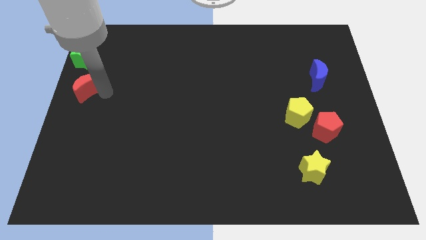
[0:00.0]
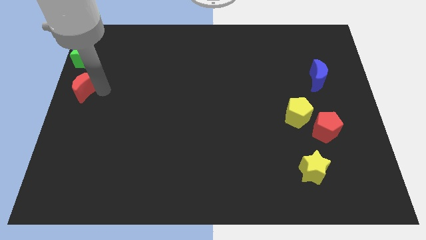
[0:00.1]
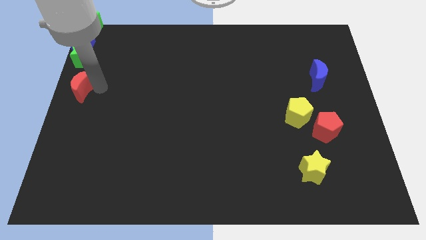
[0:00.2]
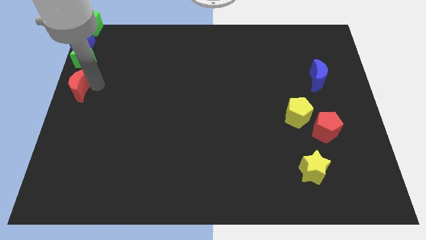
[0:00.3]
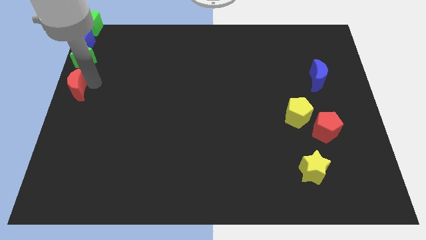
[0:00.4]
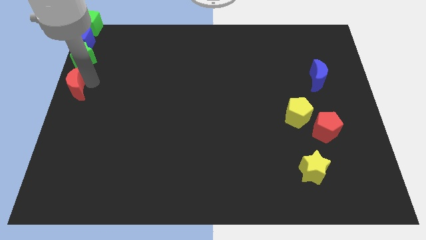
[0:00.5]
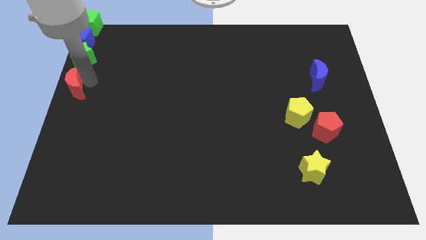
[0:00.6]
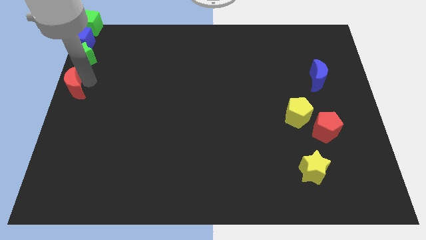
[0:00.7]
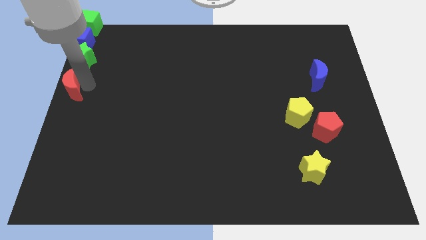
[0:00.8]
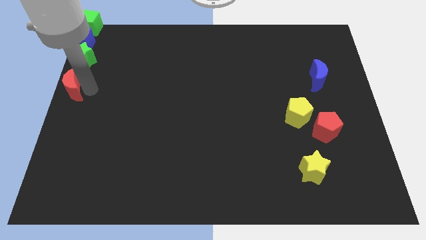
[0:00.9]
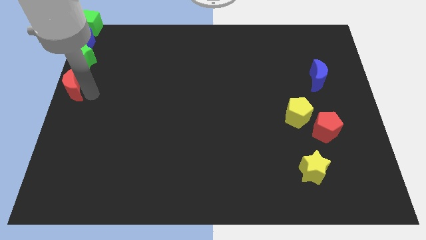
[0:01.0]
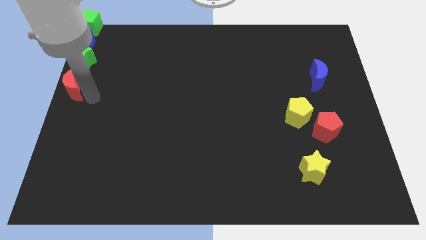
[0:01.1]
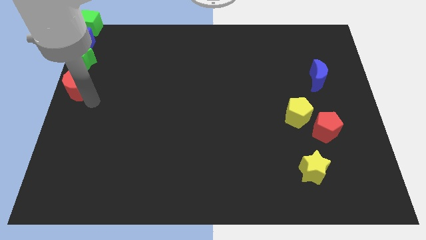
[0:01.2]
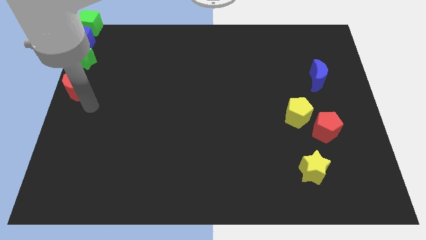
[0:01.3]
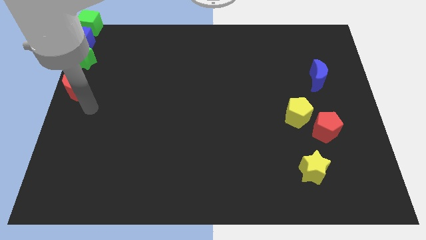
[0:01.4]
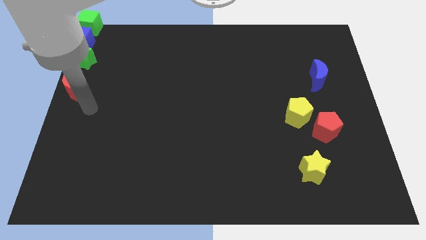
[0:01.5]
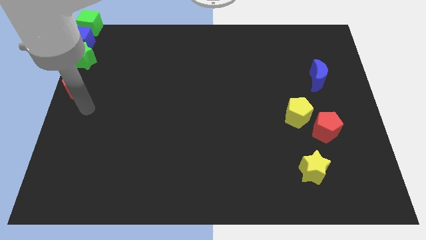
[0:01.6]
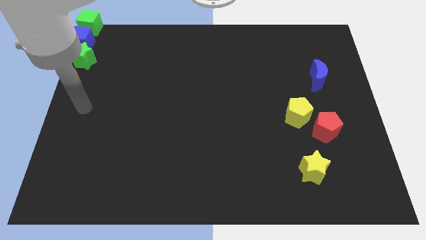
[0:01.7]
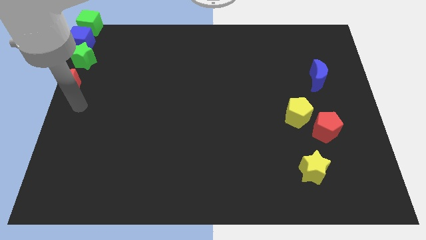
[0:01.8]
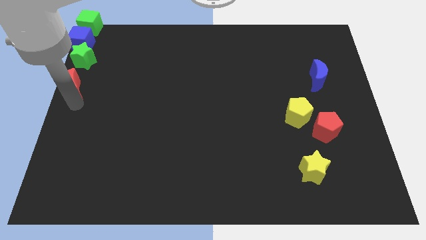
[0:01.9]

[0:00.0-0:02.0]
push the red crescent at the bottom of green star

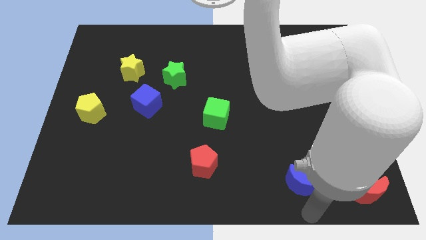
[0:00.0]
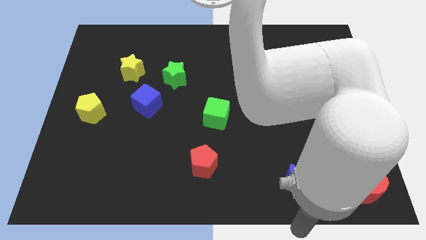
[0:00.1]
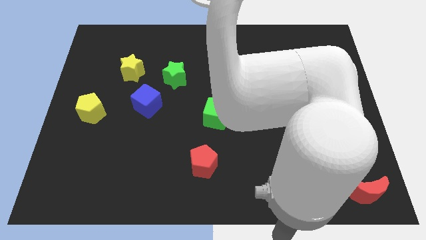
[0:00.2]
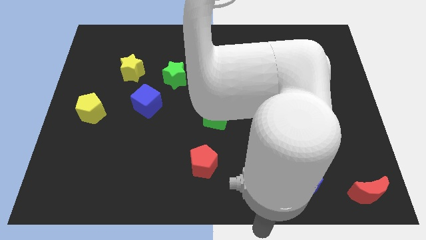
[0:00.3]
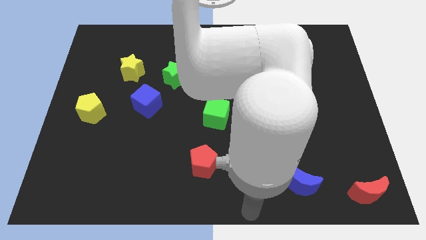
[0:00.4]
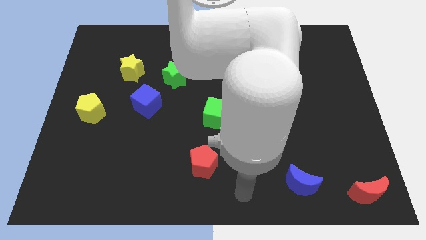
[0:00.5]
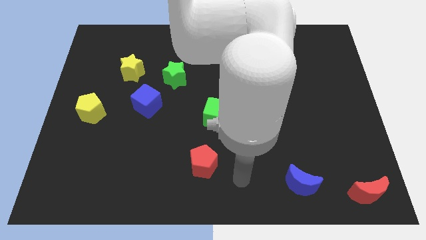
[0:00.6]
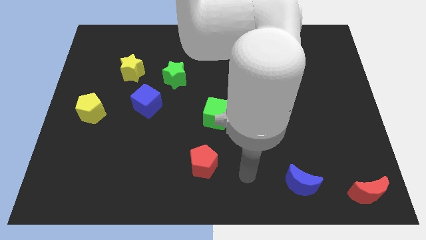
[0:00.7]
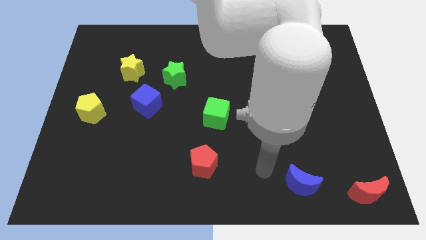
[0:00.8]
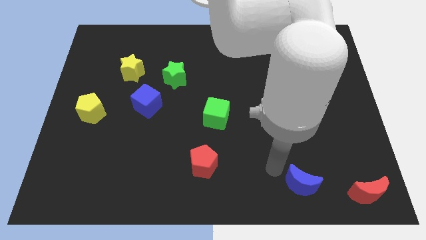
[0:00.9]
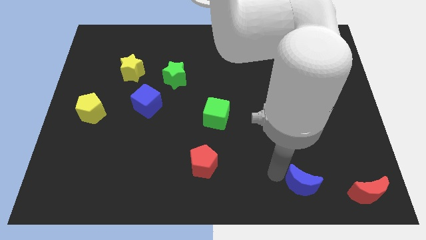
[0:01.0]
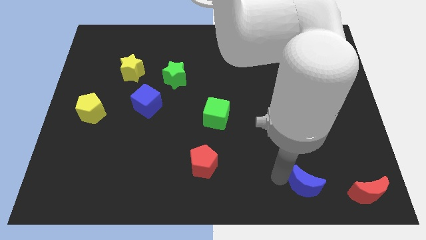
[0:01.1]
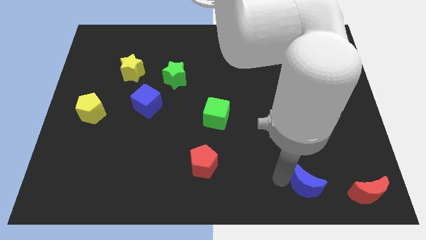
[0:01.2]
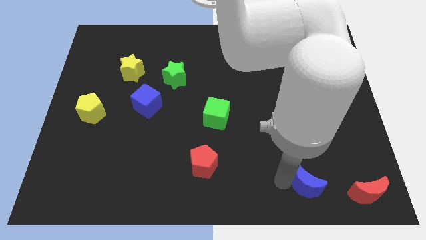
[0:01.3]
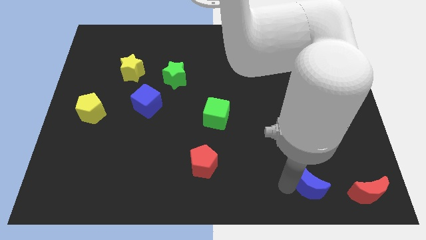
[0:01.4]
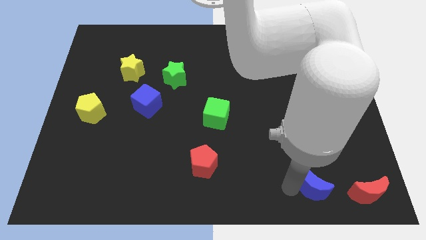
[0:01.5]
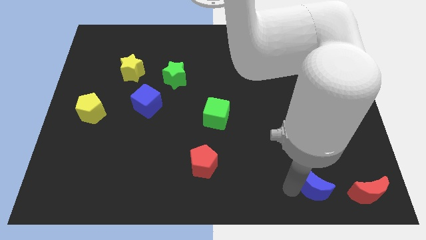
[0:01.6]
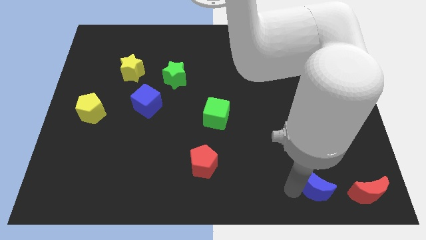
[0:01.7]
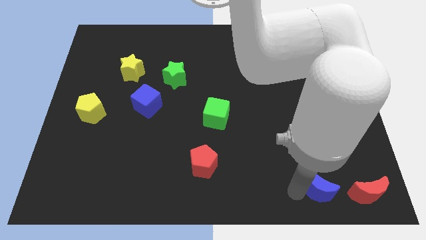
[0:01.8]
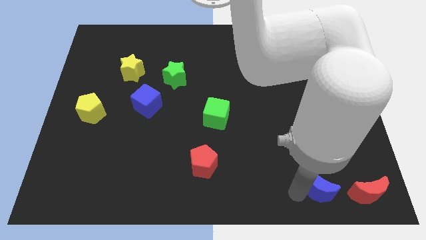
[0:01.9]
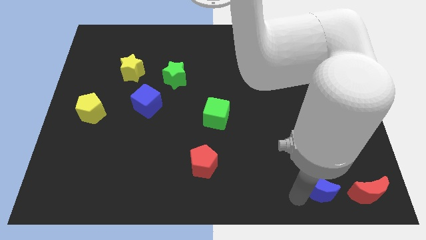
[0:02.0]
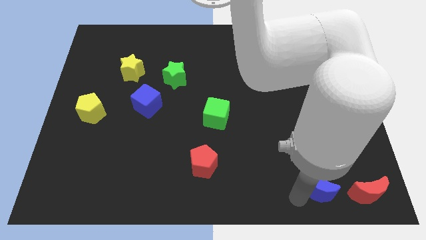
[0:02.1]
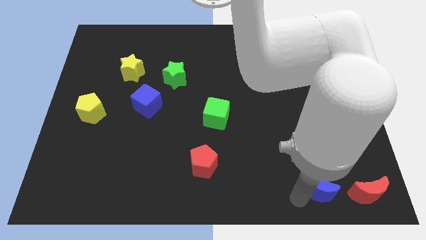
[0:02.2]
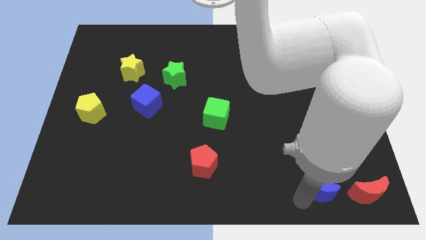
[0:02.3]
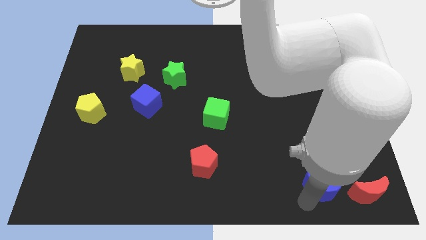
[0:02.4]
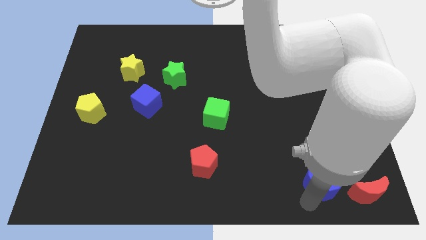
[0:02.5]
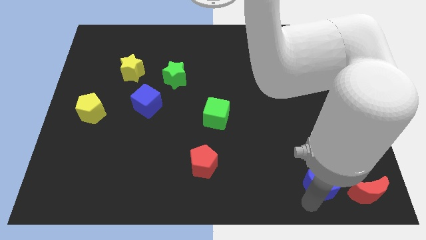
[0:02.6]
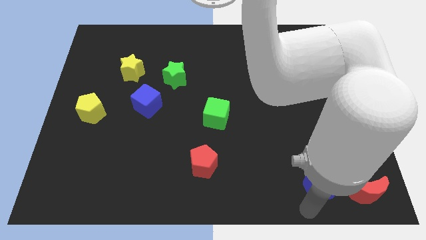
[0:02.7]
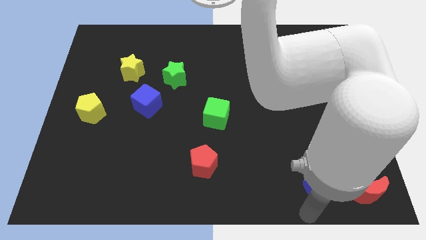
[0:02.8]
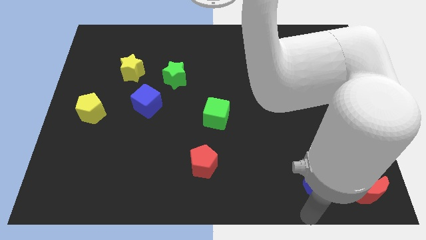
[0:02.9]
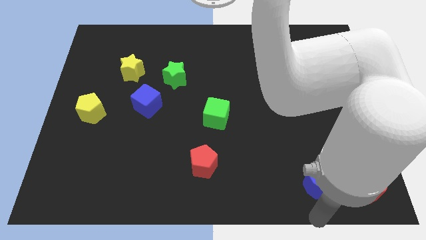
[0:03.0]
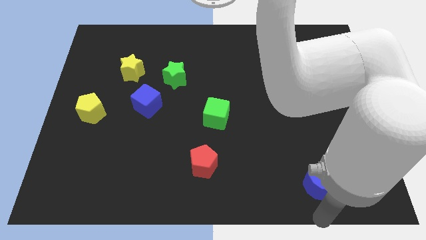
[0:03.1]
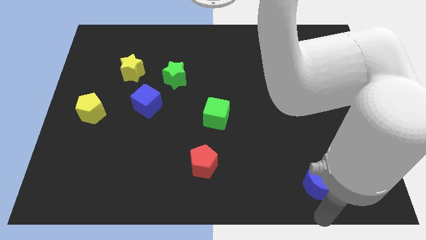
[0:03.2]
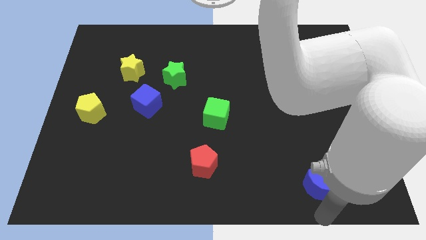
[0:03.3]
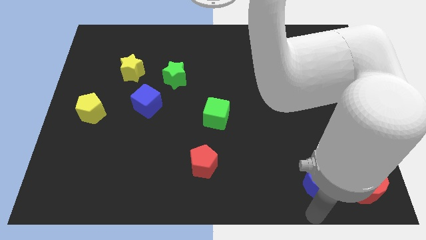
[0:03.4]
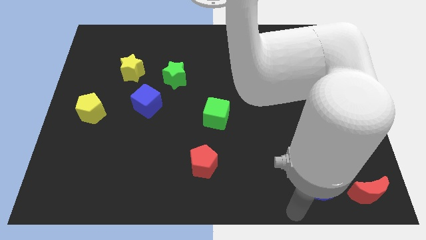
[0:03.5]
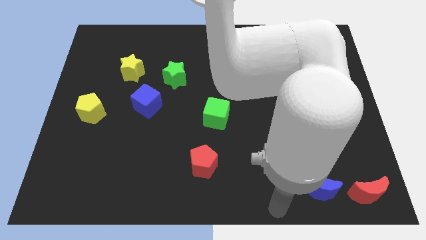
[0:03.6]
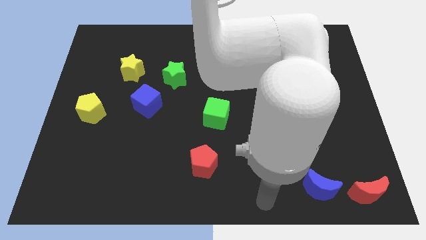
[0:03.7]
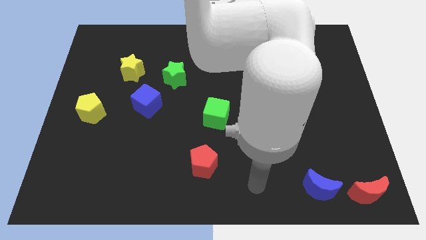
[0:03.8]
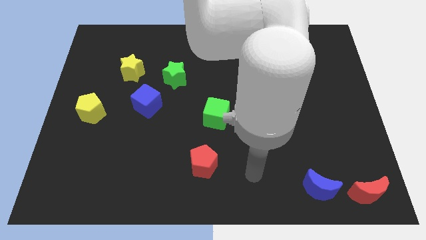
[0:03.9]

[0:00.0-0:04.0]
put the blue crescent to the left side of red crescent

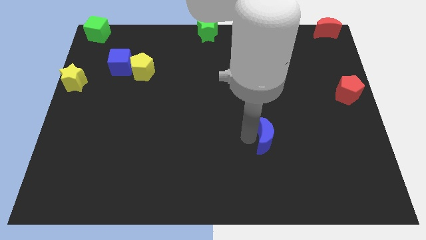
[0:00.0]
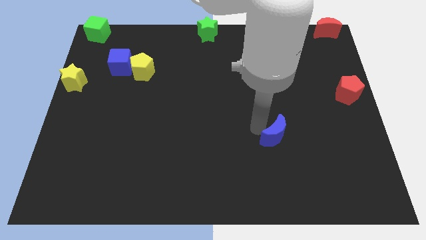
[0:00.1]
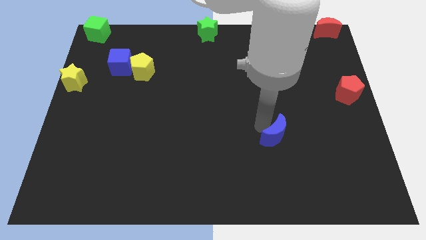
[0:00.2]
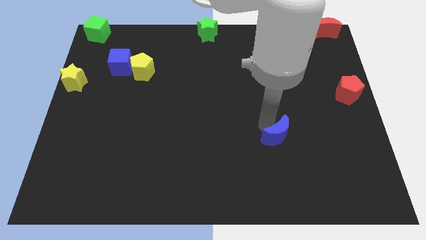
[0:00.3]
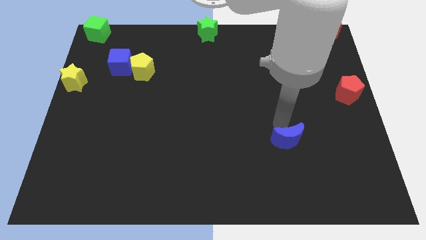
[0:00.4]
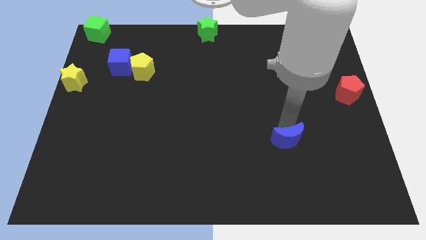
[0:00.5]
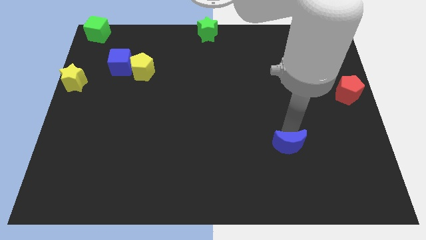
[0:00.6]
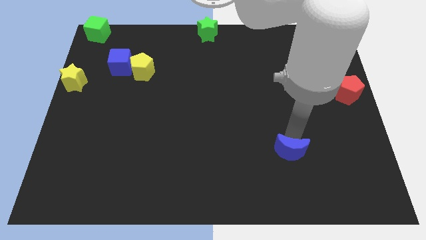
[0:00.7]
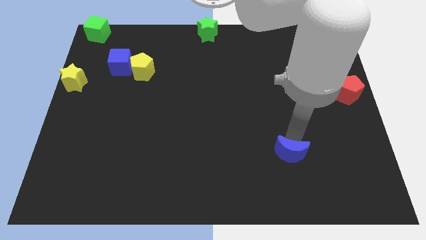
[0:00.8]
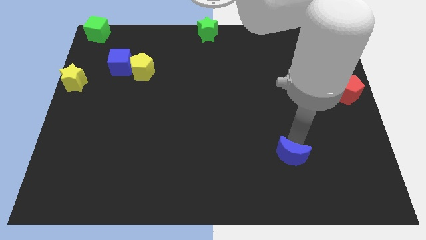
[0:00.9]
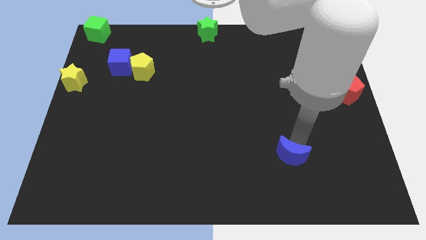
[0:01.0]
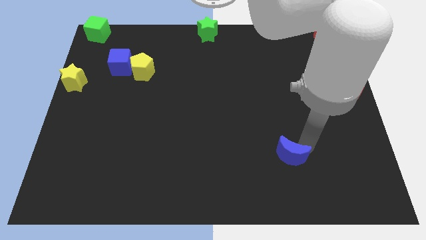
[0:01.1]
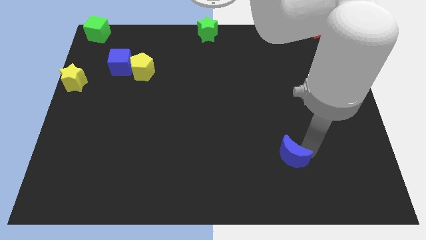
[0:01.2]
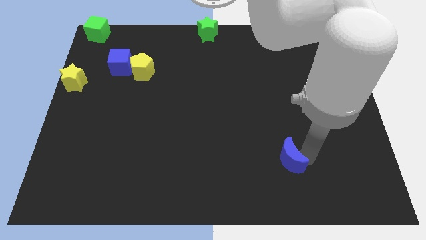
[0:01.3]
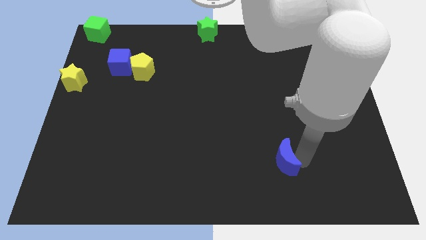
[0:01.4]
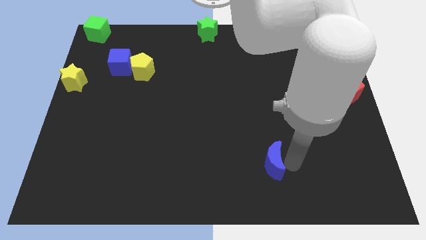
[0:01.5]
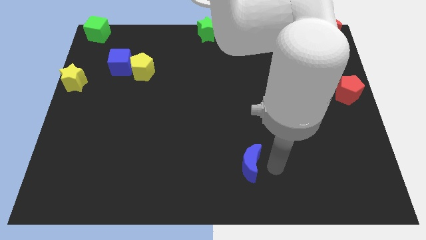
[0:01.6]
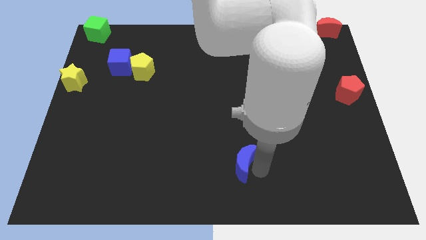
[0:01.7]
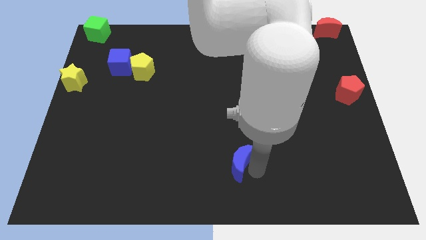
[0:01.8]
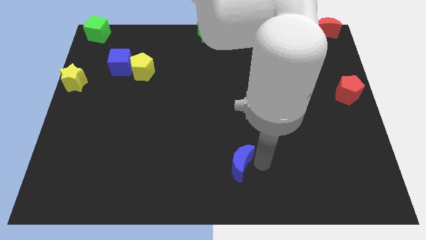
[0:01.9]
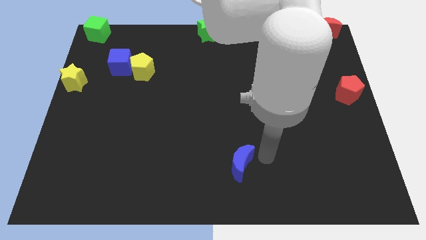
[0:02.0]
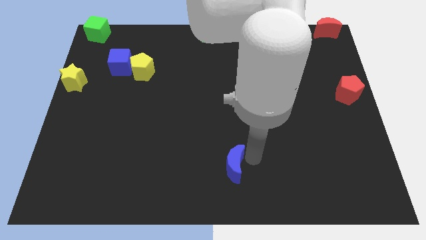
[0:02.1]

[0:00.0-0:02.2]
slide the blue moon towards the bottom center

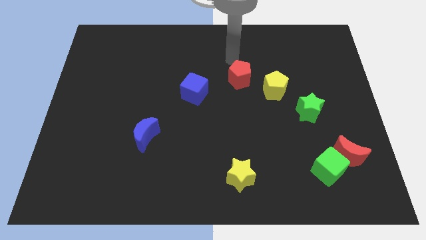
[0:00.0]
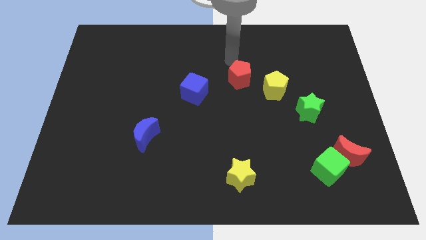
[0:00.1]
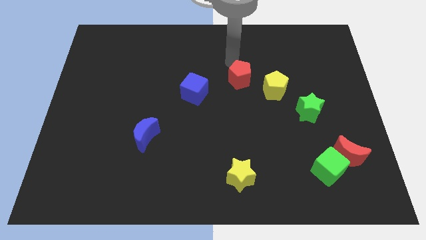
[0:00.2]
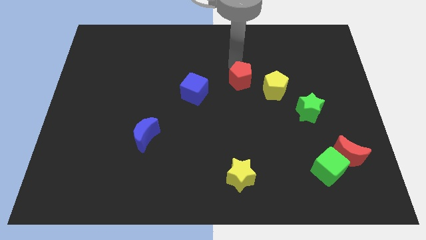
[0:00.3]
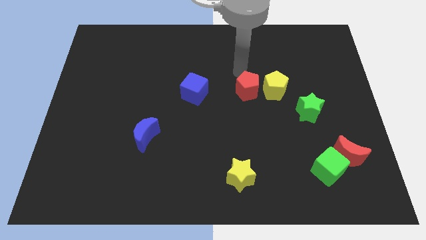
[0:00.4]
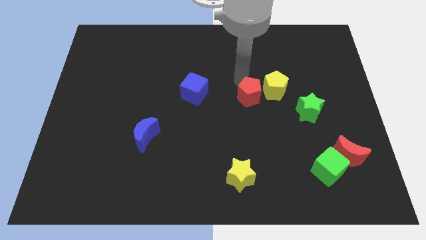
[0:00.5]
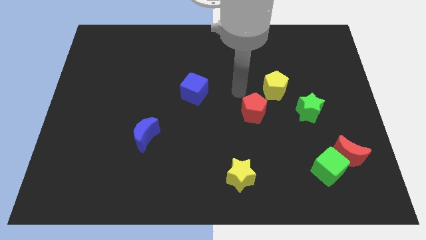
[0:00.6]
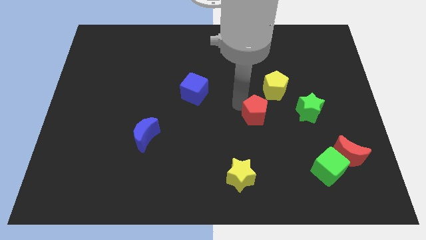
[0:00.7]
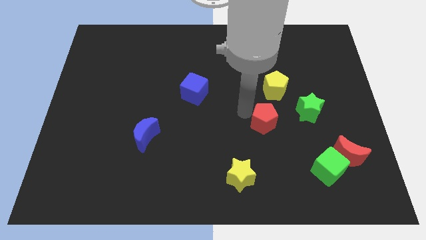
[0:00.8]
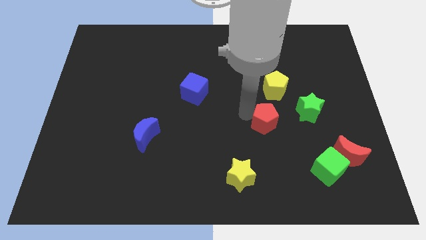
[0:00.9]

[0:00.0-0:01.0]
place the red pentagon below the yellow pentagon
